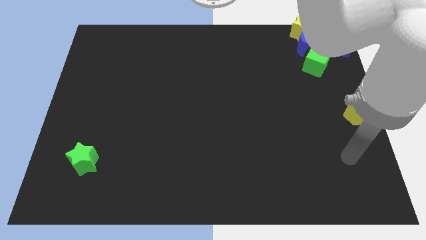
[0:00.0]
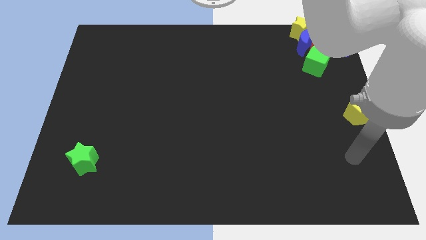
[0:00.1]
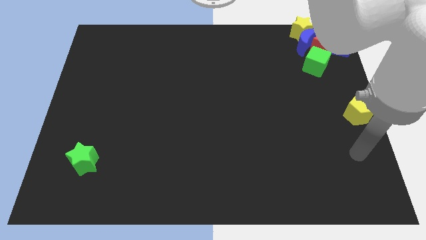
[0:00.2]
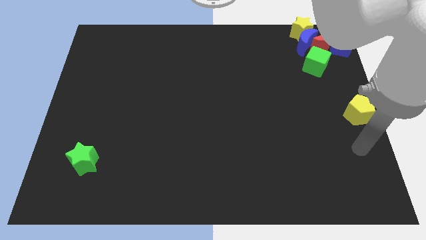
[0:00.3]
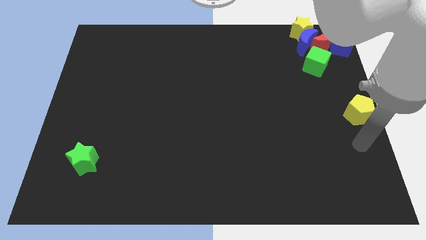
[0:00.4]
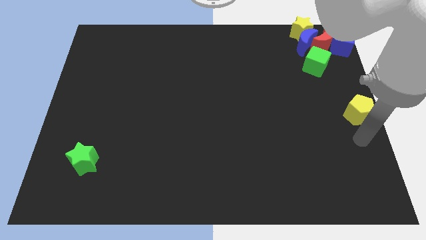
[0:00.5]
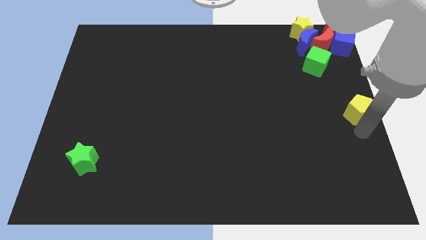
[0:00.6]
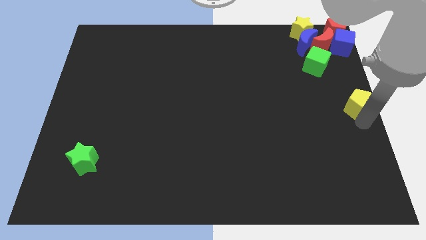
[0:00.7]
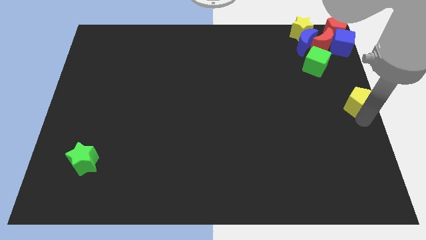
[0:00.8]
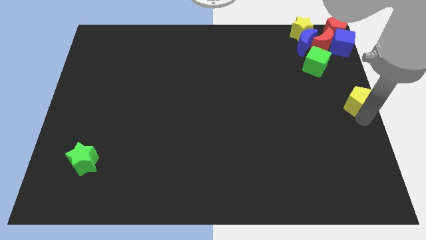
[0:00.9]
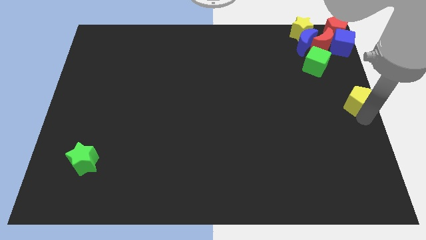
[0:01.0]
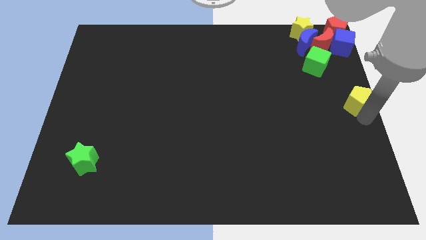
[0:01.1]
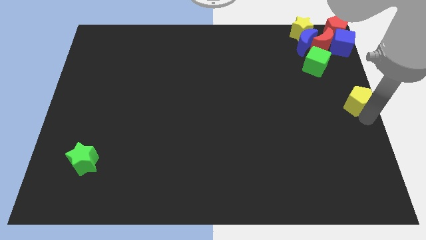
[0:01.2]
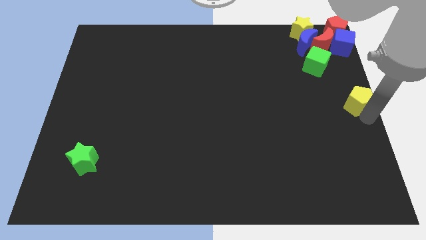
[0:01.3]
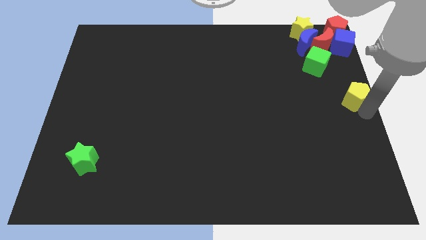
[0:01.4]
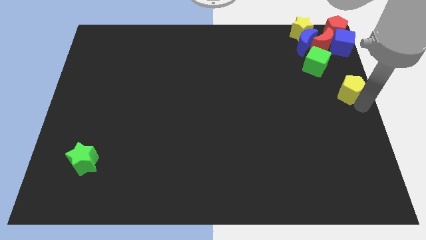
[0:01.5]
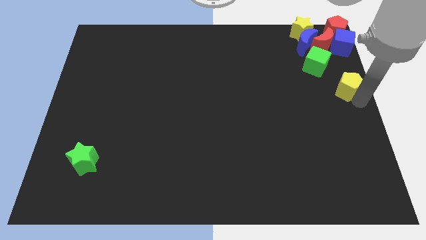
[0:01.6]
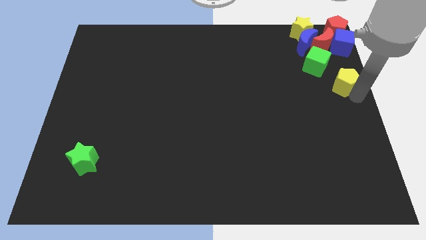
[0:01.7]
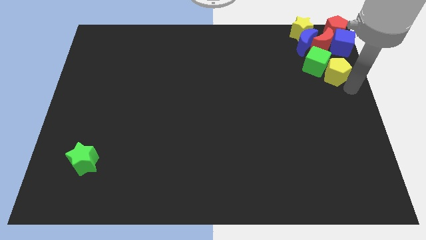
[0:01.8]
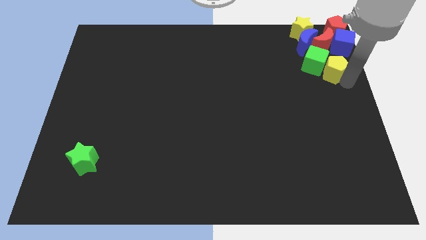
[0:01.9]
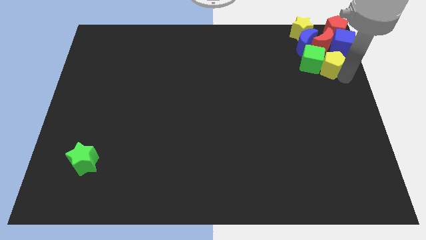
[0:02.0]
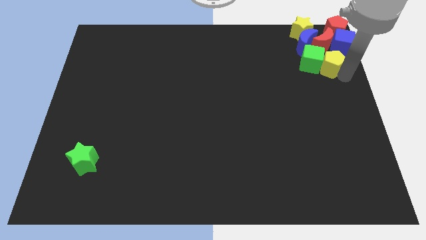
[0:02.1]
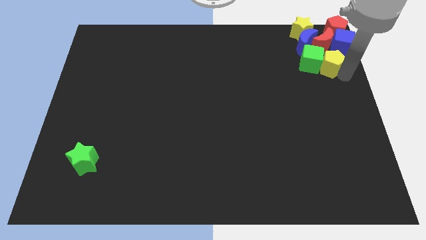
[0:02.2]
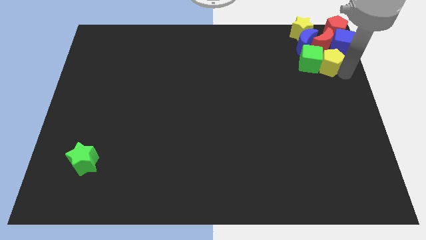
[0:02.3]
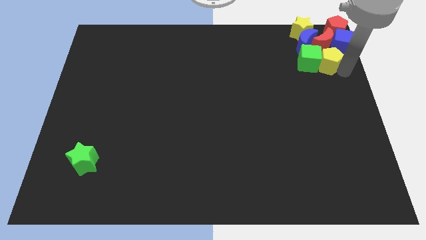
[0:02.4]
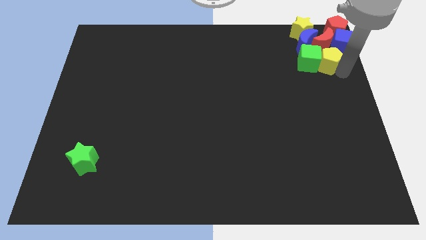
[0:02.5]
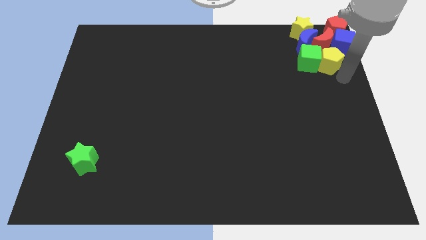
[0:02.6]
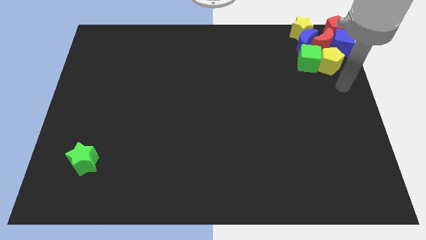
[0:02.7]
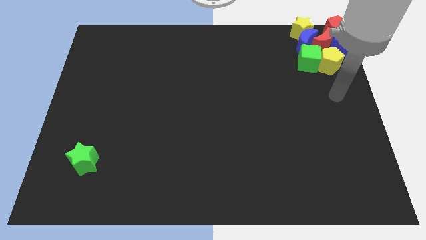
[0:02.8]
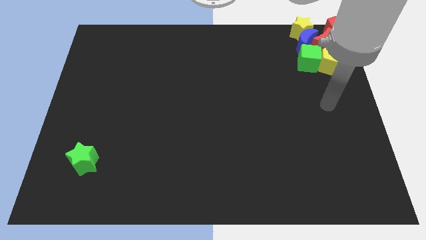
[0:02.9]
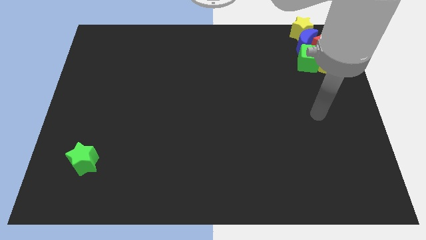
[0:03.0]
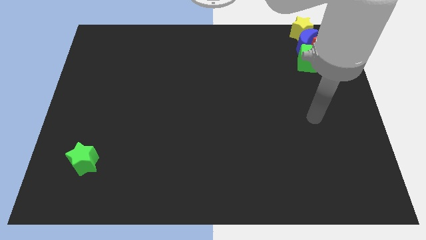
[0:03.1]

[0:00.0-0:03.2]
push the yellow pentagon into right of green cube

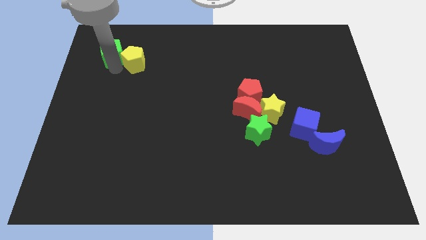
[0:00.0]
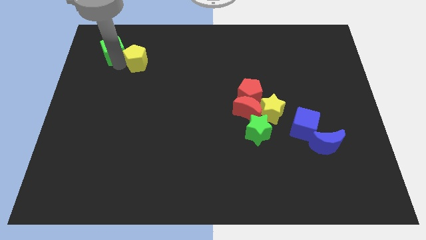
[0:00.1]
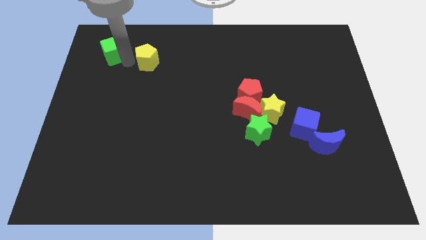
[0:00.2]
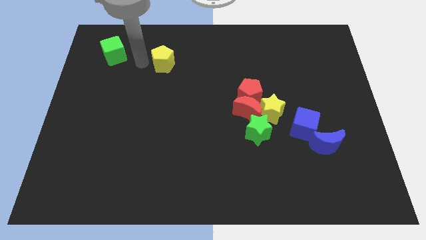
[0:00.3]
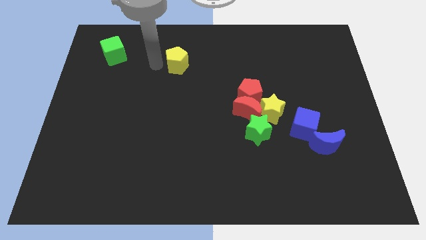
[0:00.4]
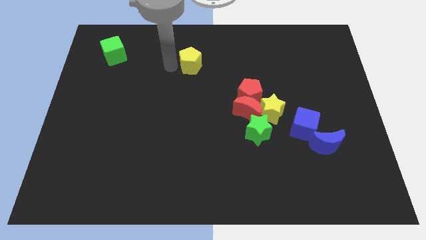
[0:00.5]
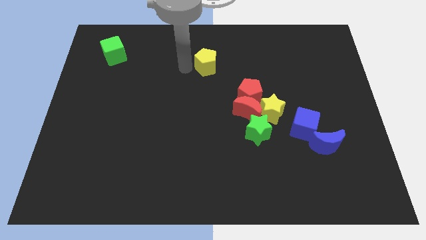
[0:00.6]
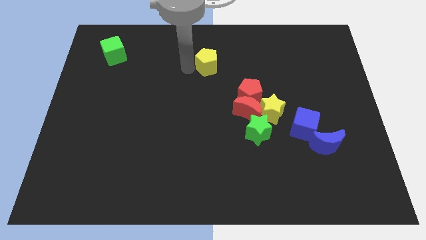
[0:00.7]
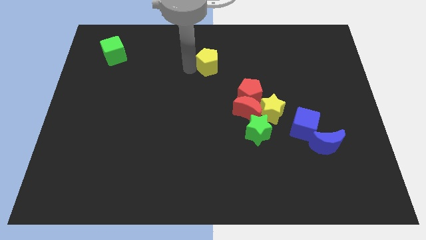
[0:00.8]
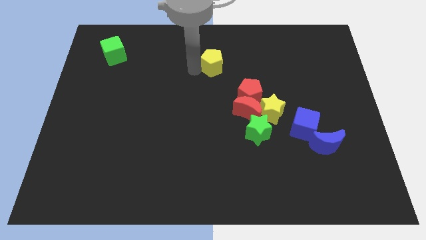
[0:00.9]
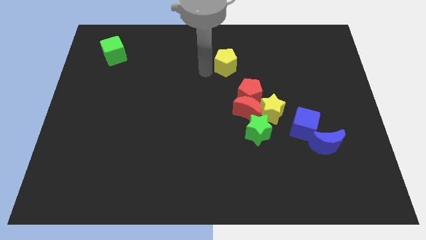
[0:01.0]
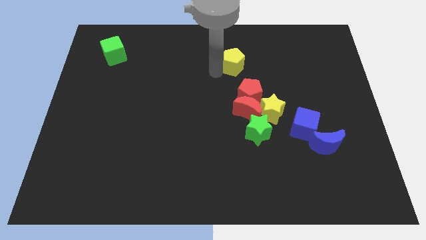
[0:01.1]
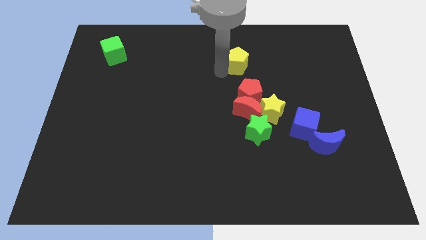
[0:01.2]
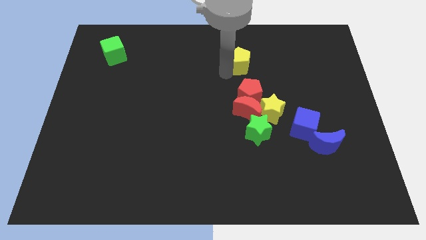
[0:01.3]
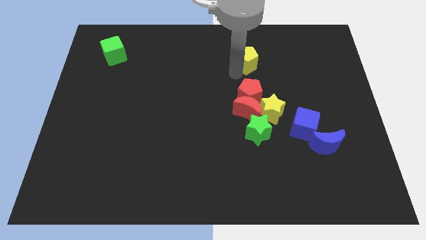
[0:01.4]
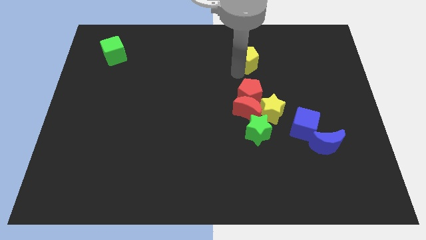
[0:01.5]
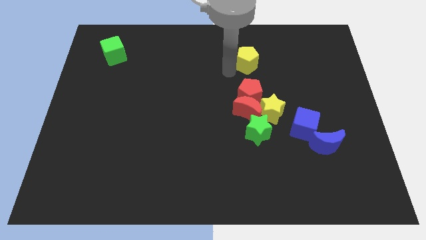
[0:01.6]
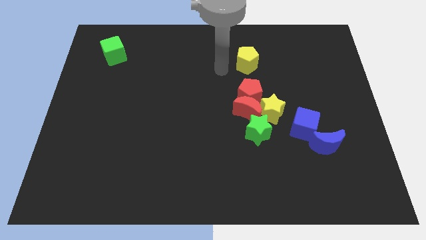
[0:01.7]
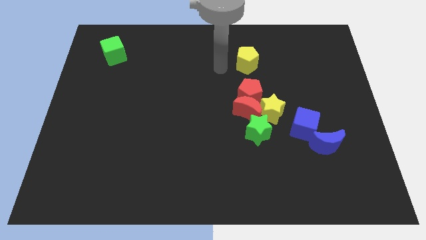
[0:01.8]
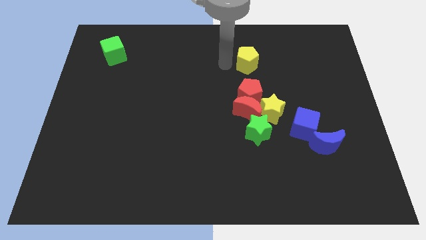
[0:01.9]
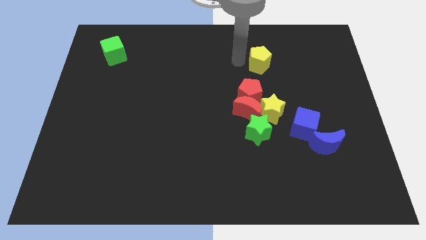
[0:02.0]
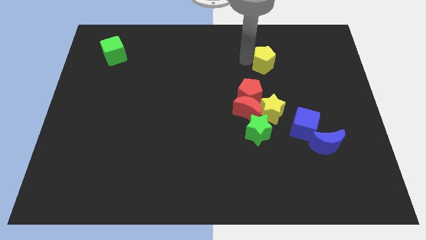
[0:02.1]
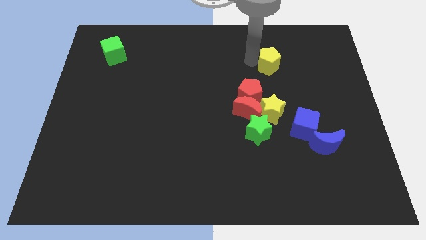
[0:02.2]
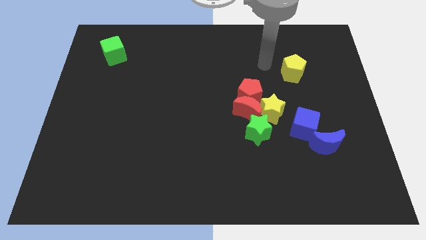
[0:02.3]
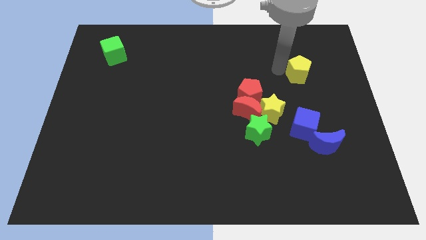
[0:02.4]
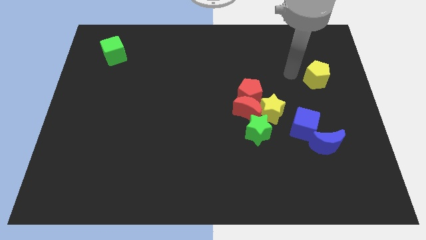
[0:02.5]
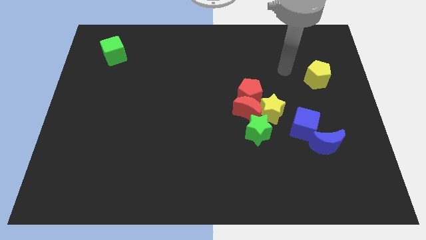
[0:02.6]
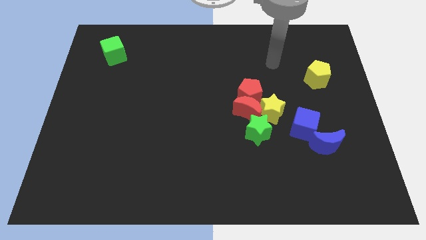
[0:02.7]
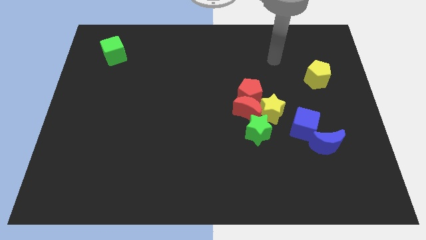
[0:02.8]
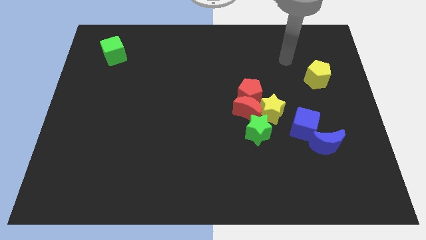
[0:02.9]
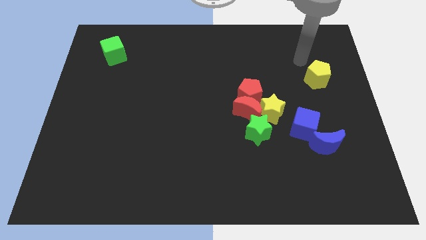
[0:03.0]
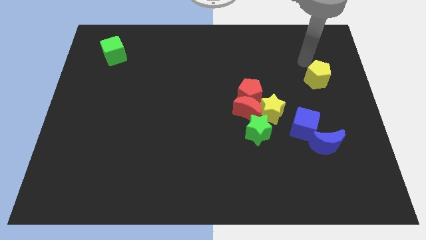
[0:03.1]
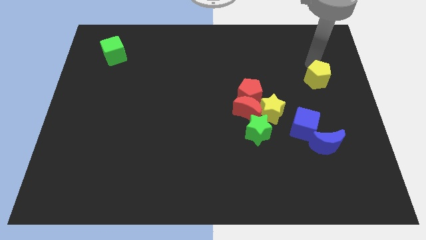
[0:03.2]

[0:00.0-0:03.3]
separate the yellow pentagon from the green cube

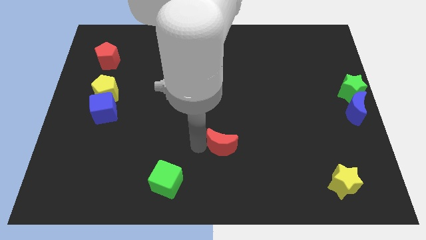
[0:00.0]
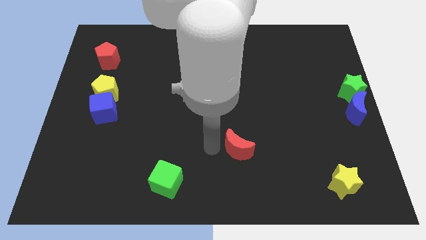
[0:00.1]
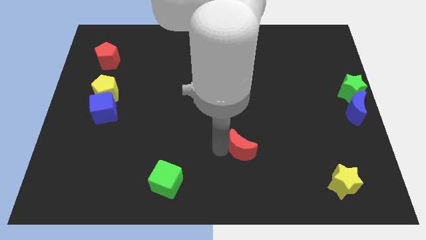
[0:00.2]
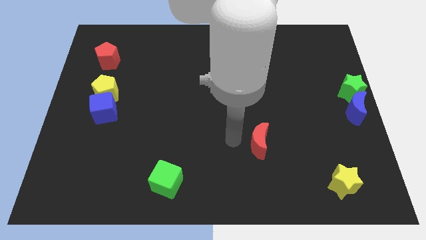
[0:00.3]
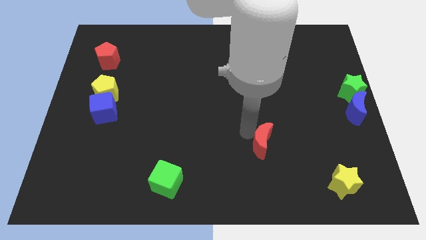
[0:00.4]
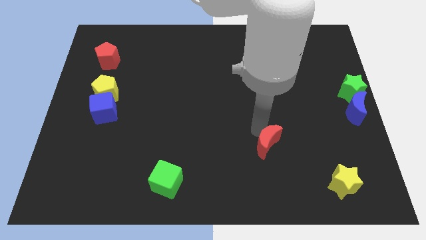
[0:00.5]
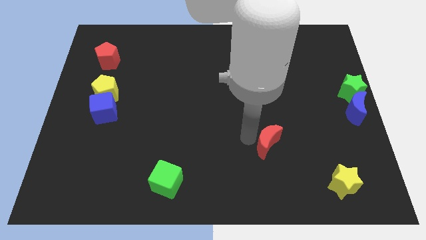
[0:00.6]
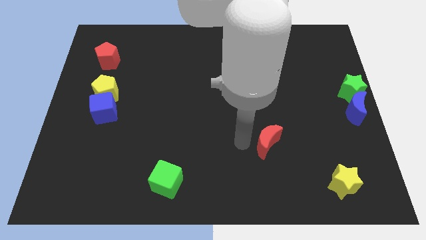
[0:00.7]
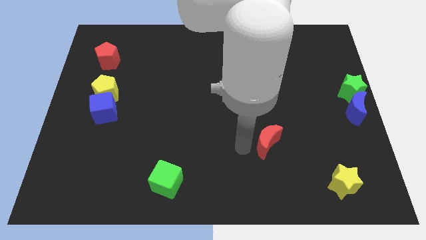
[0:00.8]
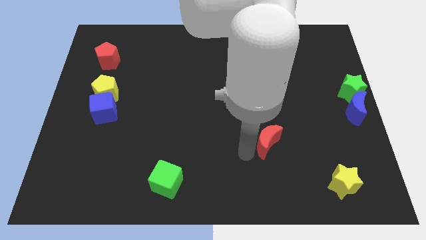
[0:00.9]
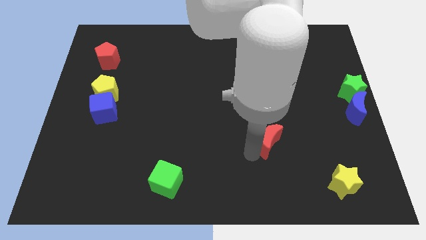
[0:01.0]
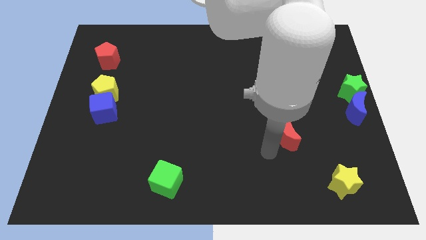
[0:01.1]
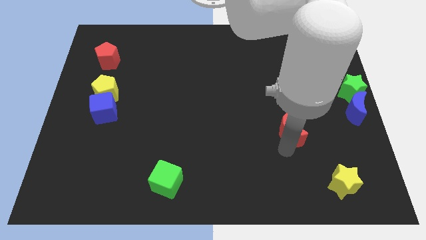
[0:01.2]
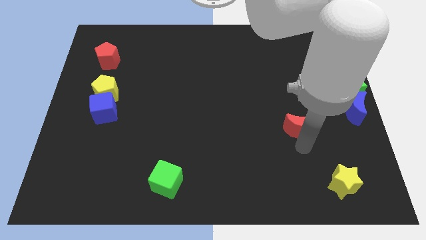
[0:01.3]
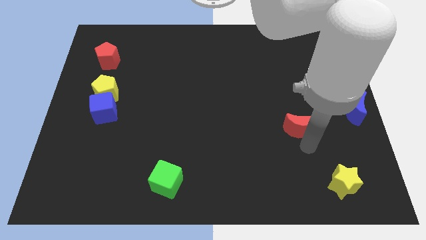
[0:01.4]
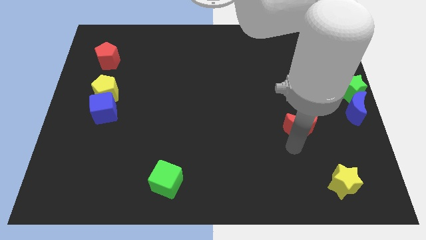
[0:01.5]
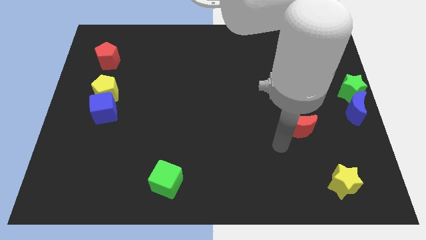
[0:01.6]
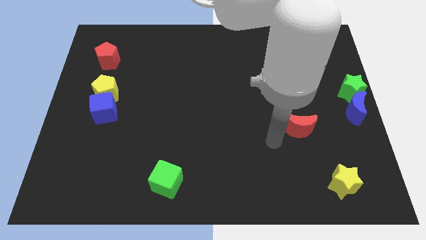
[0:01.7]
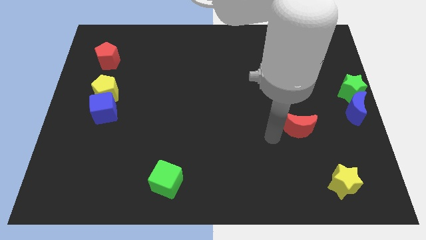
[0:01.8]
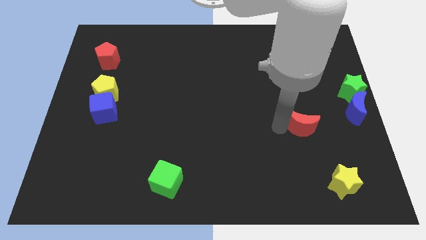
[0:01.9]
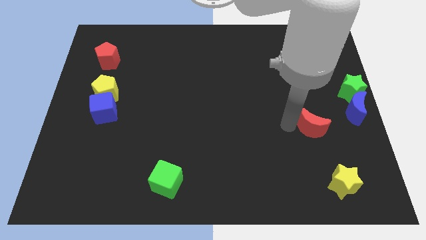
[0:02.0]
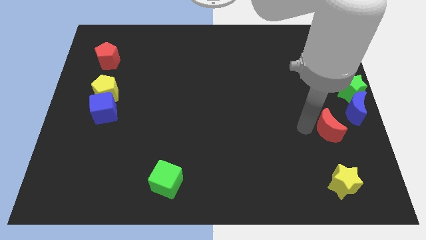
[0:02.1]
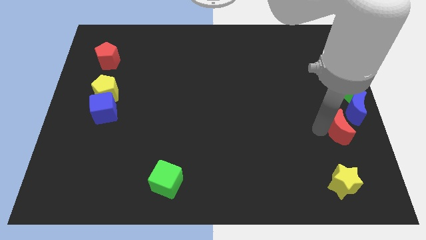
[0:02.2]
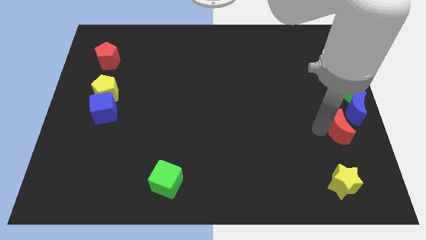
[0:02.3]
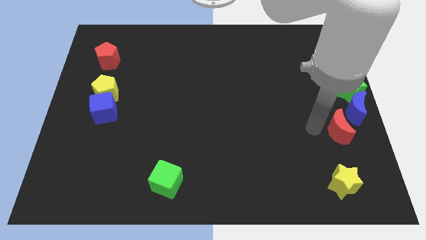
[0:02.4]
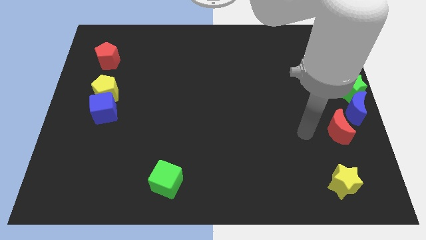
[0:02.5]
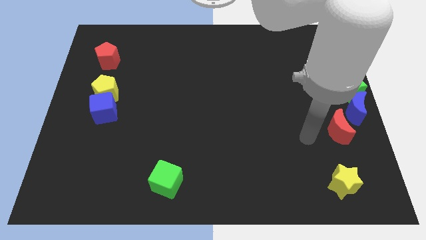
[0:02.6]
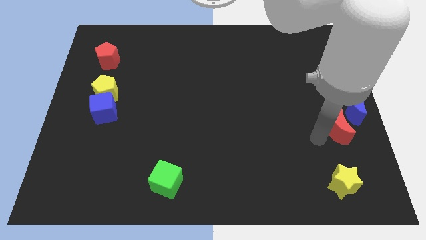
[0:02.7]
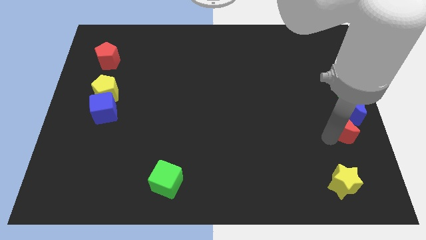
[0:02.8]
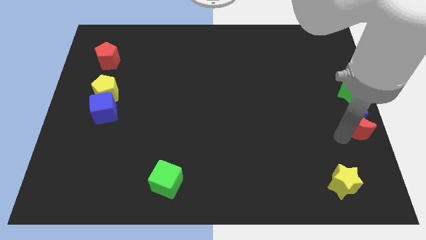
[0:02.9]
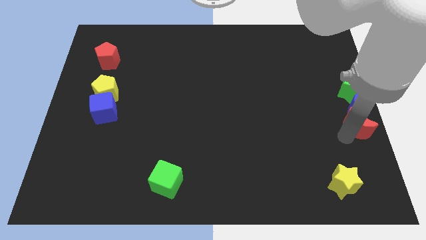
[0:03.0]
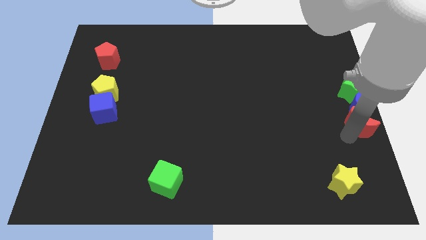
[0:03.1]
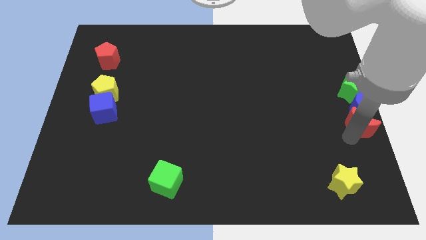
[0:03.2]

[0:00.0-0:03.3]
push the red crescent to the bottom of the blue crescent
